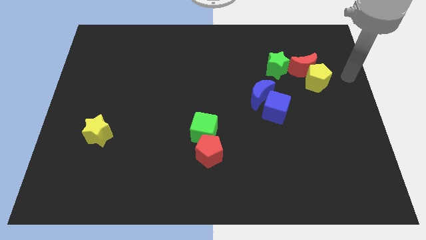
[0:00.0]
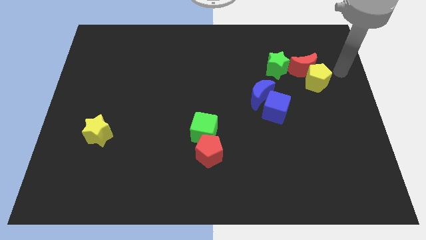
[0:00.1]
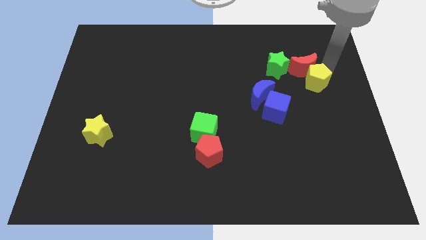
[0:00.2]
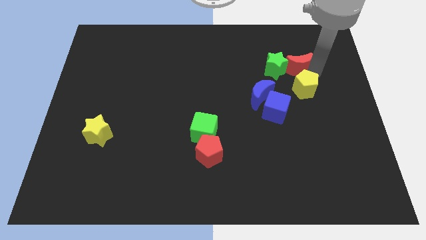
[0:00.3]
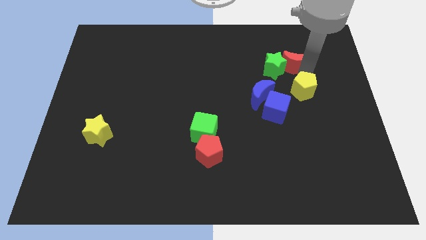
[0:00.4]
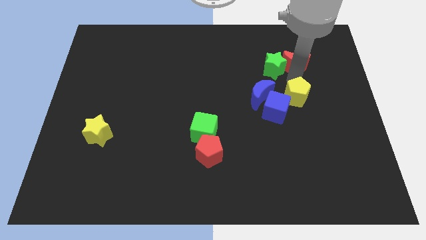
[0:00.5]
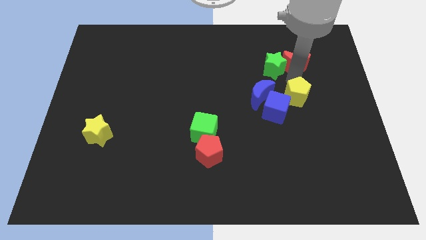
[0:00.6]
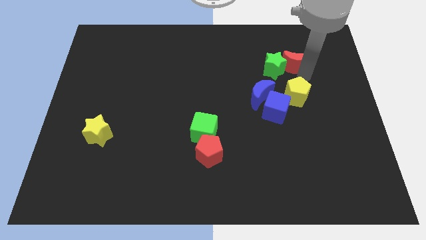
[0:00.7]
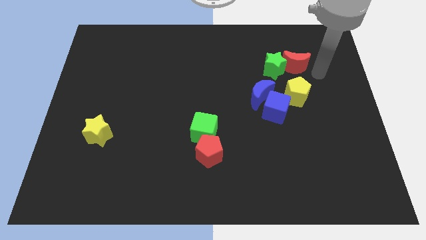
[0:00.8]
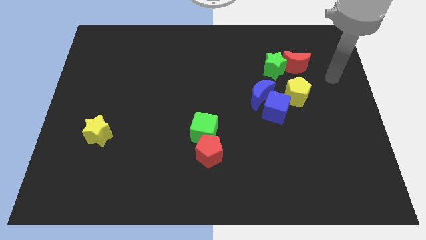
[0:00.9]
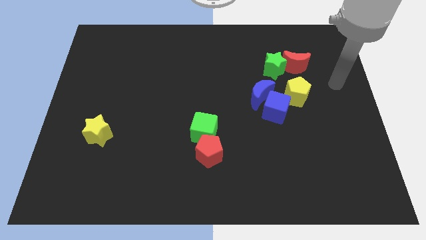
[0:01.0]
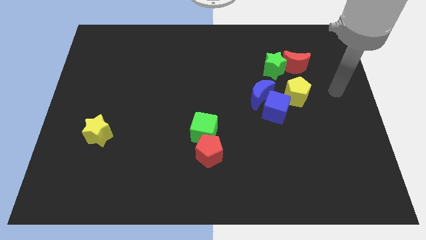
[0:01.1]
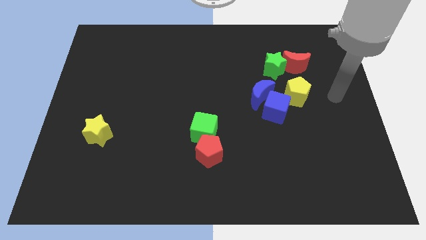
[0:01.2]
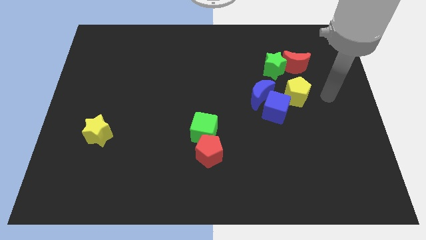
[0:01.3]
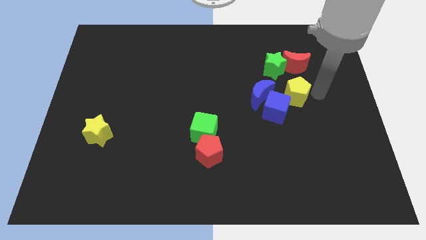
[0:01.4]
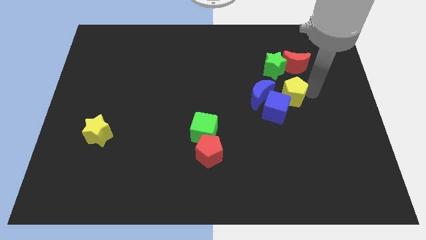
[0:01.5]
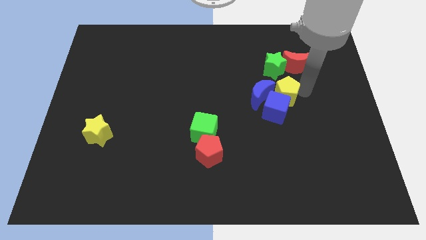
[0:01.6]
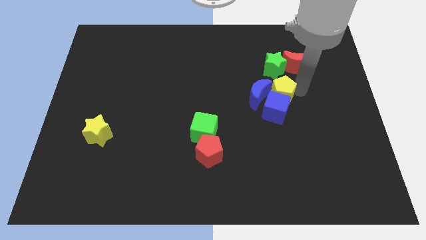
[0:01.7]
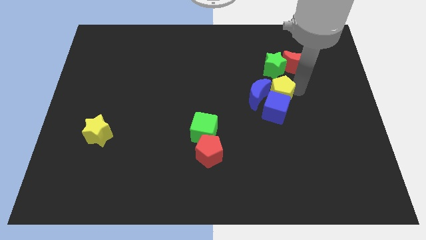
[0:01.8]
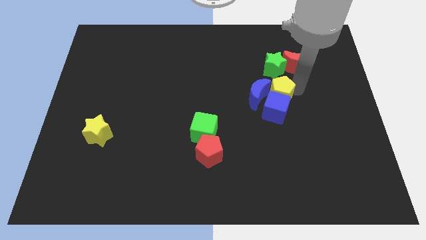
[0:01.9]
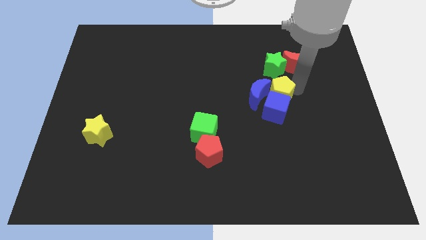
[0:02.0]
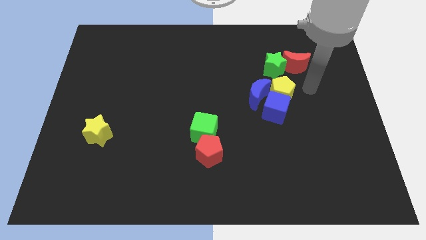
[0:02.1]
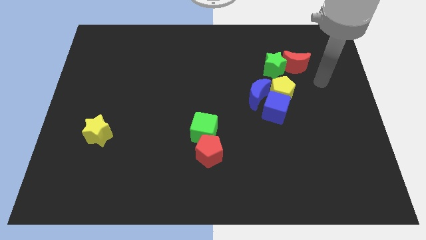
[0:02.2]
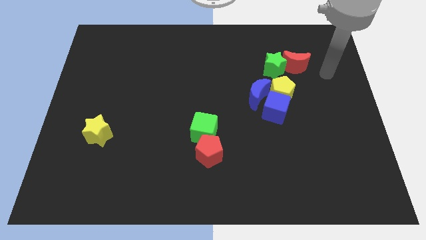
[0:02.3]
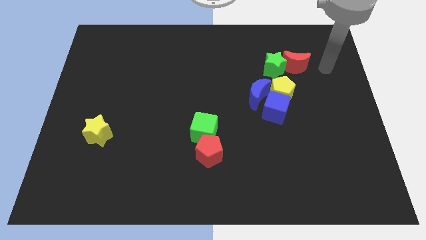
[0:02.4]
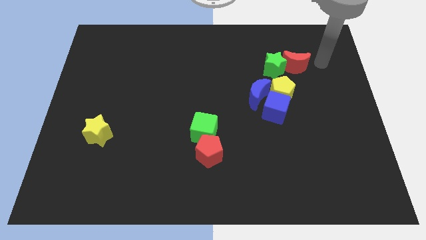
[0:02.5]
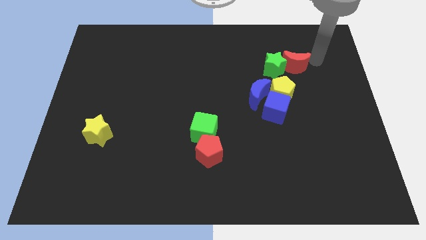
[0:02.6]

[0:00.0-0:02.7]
push the yellow pentagon into the blue blocks

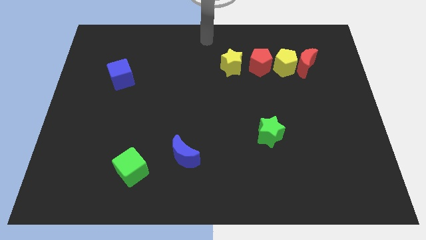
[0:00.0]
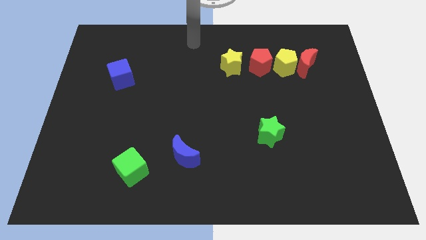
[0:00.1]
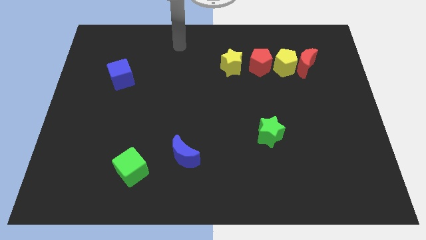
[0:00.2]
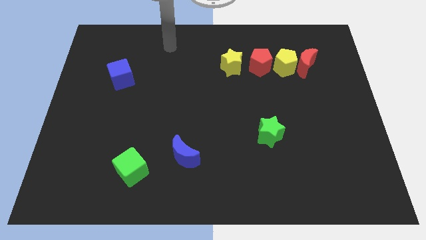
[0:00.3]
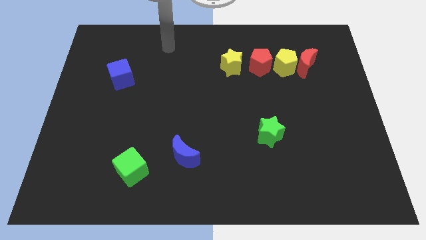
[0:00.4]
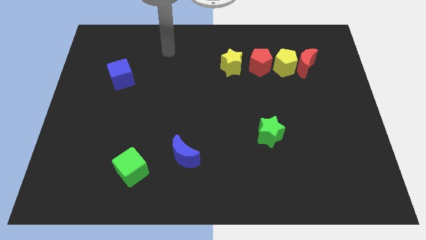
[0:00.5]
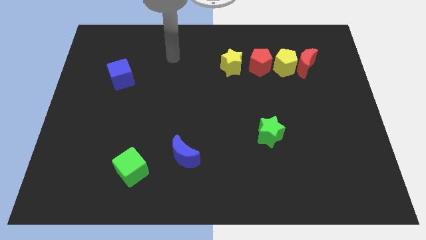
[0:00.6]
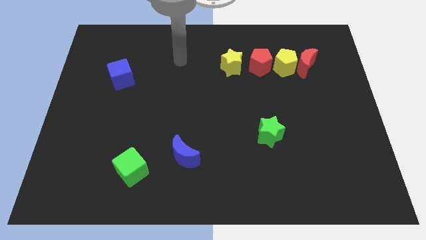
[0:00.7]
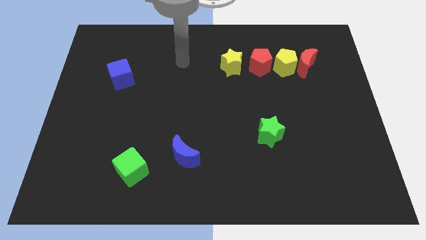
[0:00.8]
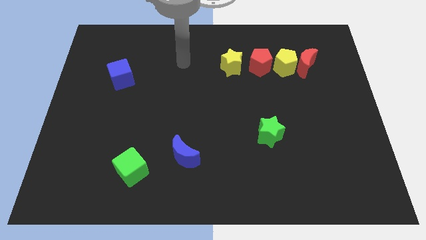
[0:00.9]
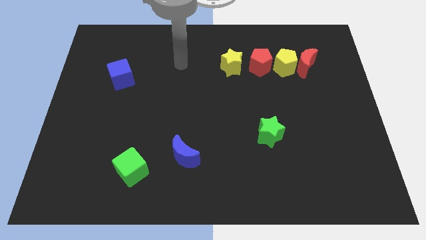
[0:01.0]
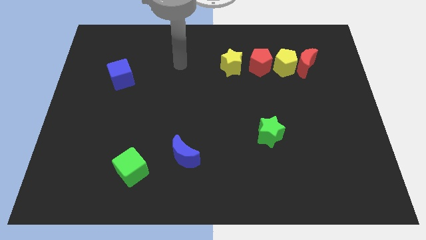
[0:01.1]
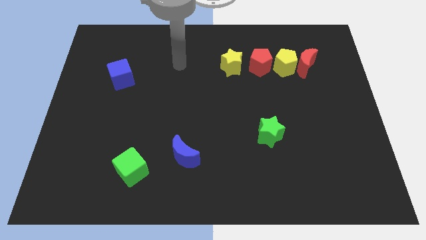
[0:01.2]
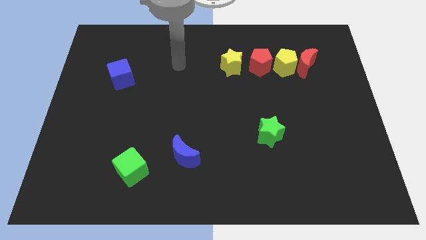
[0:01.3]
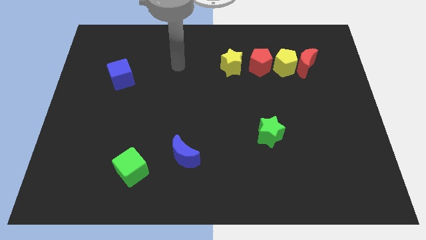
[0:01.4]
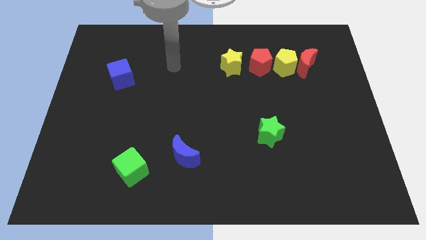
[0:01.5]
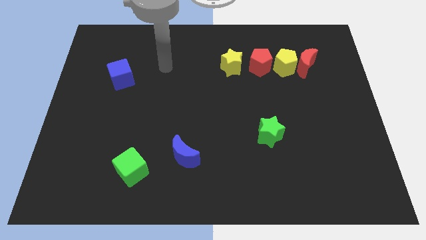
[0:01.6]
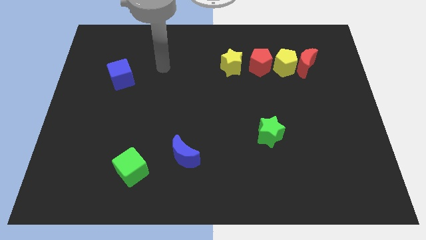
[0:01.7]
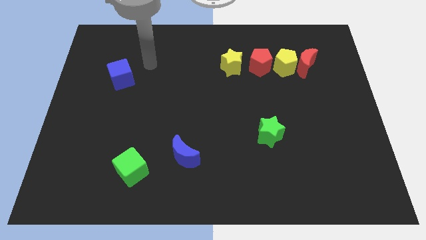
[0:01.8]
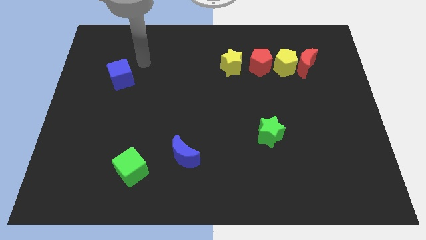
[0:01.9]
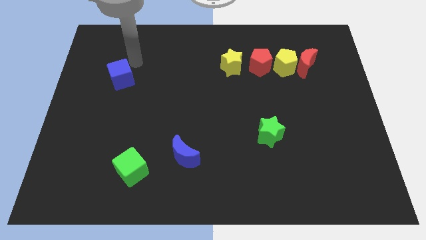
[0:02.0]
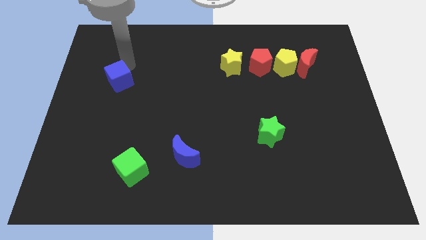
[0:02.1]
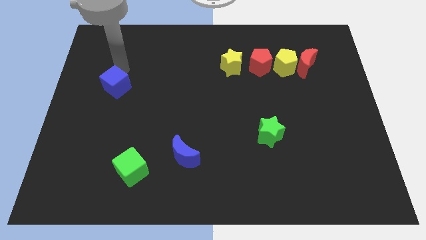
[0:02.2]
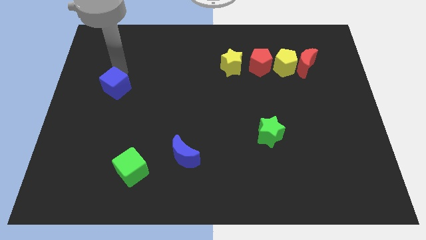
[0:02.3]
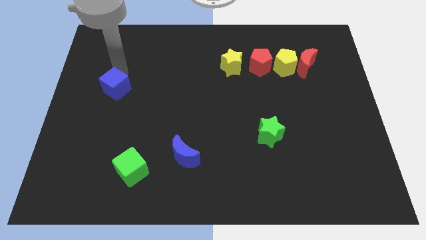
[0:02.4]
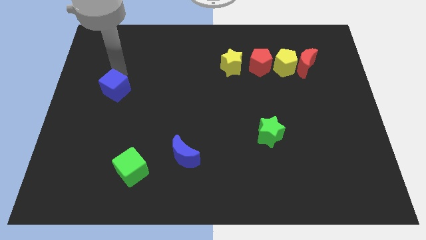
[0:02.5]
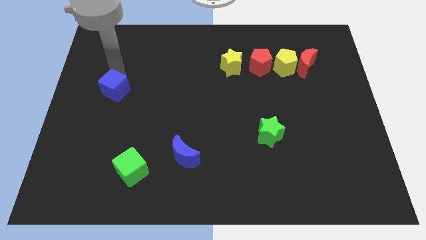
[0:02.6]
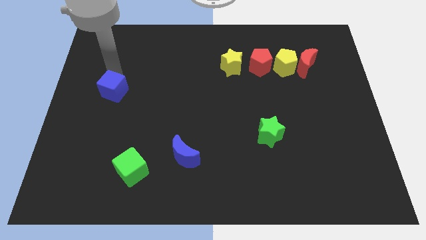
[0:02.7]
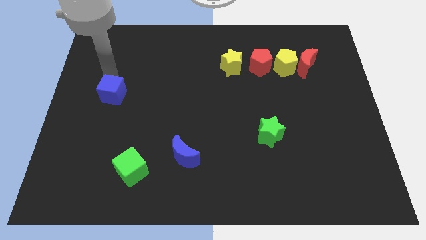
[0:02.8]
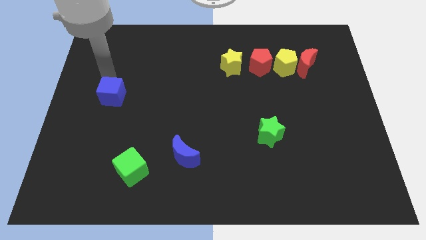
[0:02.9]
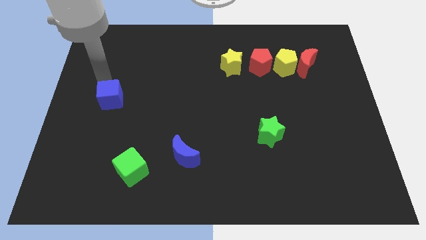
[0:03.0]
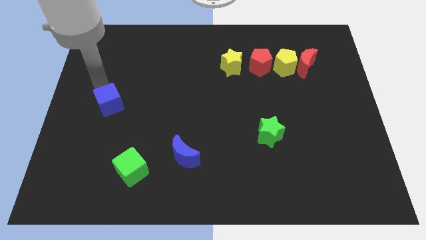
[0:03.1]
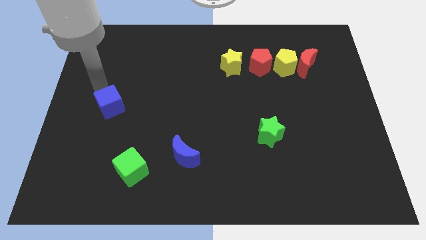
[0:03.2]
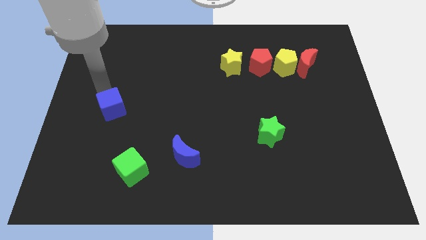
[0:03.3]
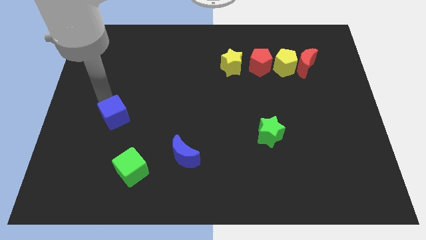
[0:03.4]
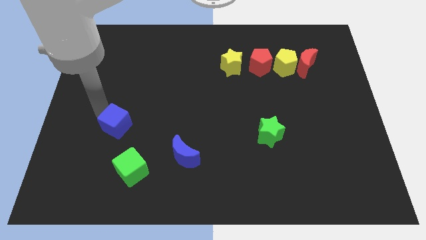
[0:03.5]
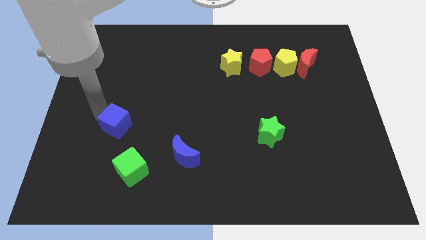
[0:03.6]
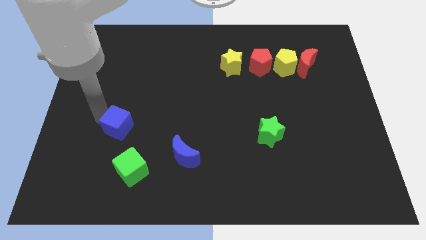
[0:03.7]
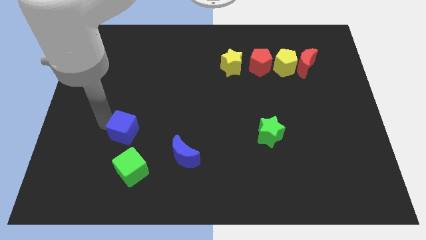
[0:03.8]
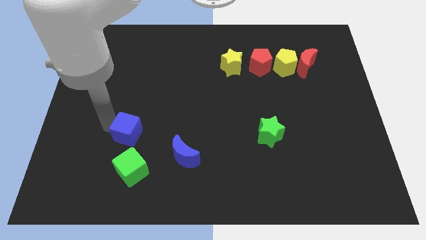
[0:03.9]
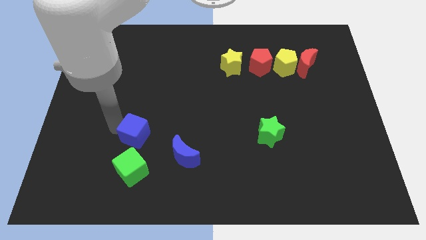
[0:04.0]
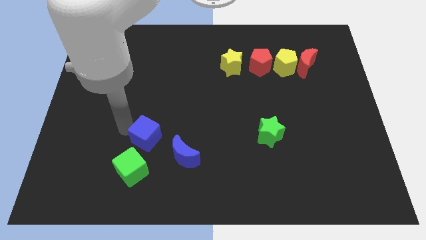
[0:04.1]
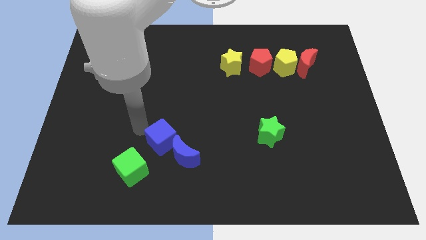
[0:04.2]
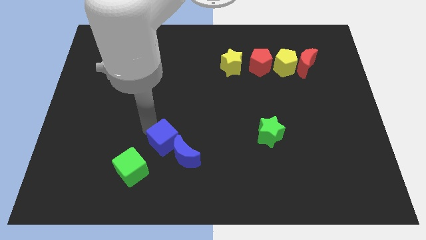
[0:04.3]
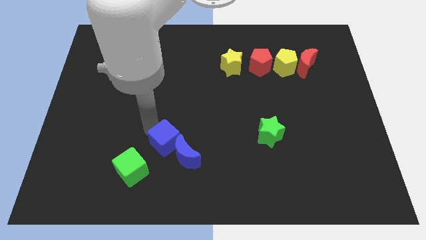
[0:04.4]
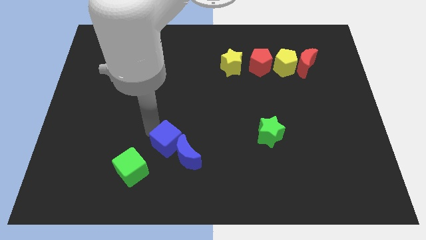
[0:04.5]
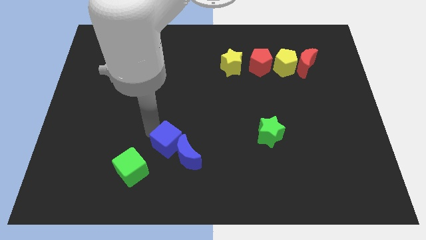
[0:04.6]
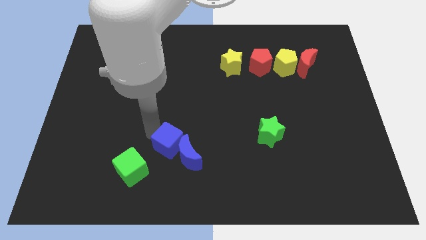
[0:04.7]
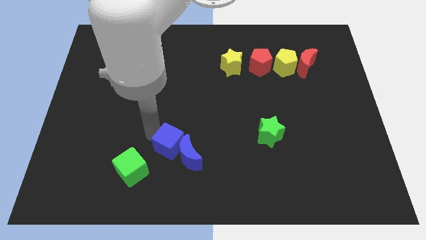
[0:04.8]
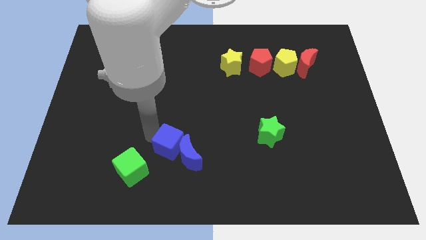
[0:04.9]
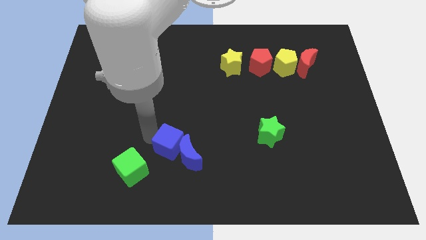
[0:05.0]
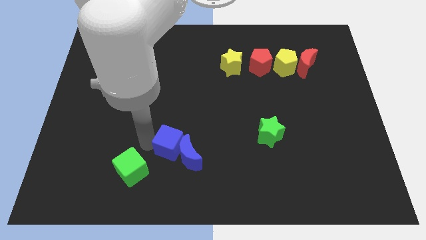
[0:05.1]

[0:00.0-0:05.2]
push the blue cube into blue crescent

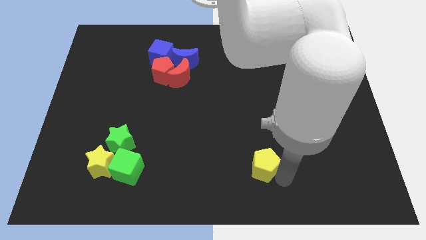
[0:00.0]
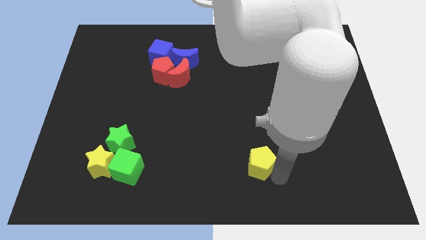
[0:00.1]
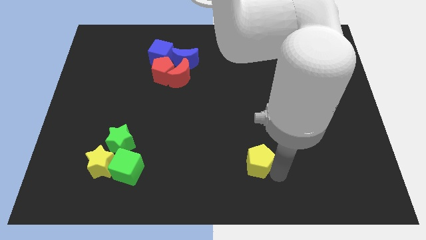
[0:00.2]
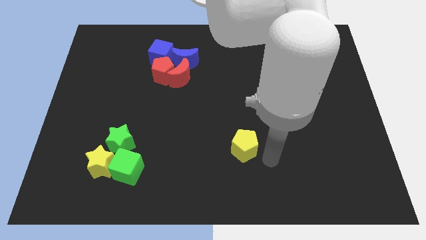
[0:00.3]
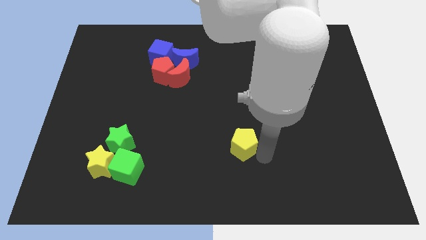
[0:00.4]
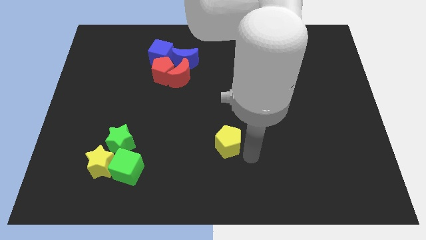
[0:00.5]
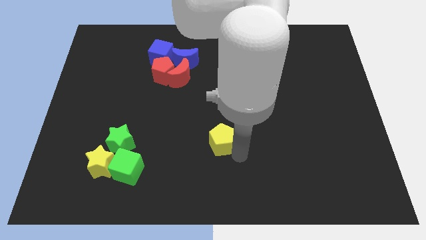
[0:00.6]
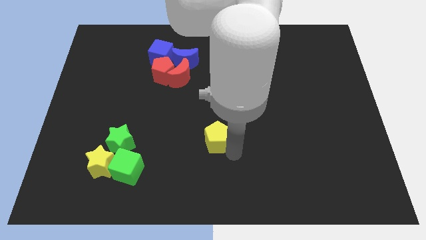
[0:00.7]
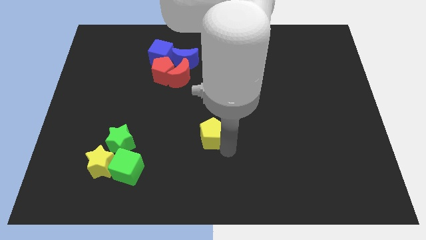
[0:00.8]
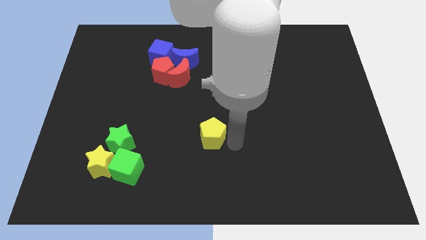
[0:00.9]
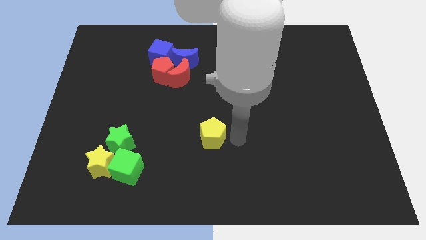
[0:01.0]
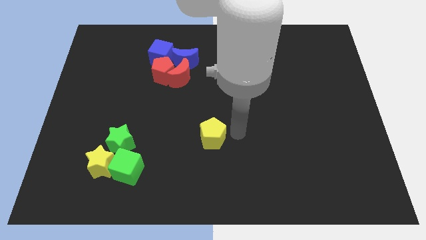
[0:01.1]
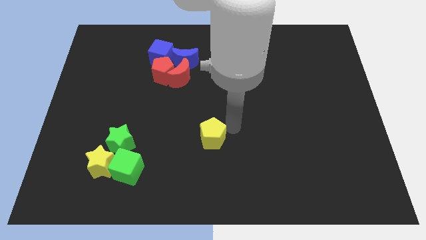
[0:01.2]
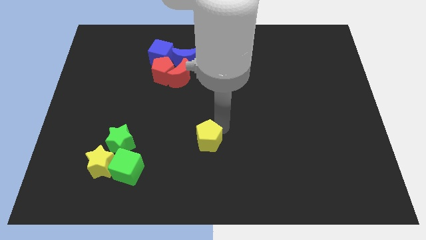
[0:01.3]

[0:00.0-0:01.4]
put the yellow pentagon parallel right to the green star
